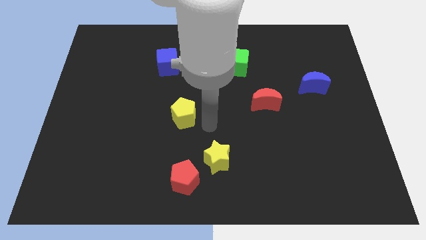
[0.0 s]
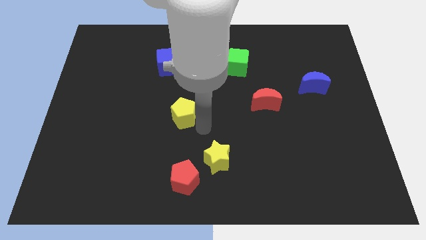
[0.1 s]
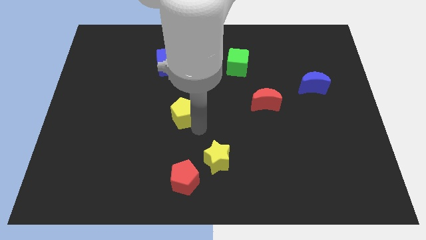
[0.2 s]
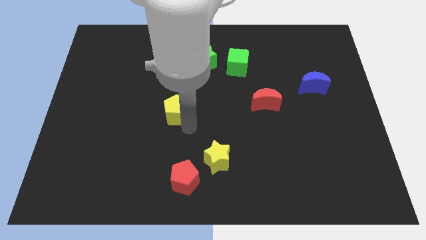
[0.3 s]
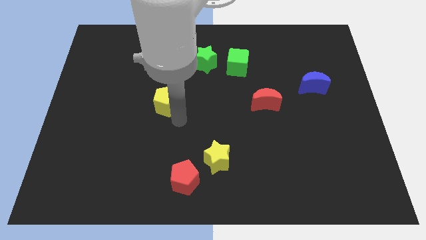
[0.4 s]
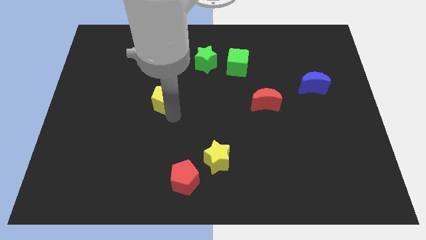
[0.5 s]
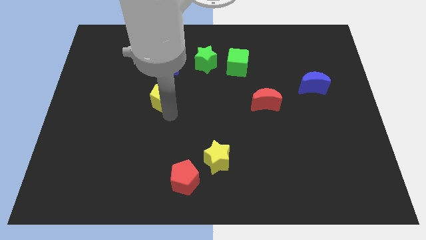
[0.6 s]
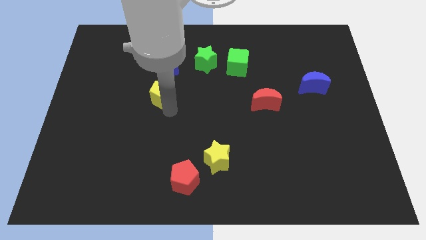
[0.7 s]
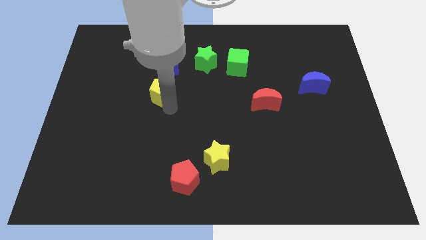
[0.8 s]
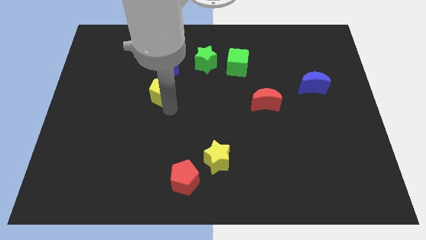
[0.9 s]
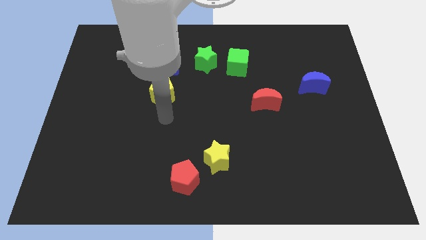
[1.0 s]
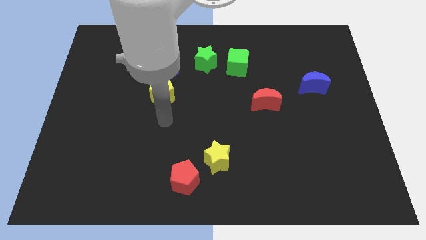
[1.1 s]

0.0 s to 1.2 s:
push yellow pentagon towards blue cube

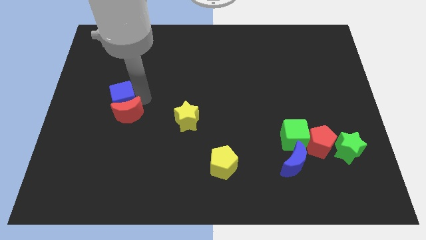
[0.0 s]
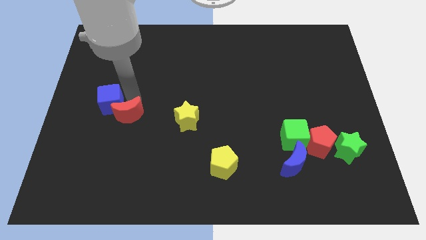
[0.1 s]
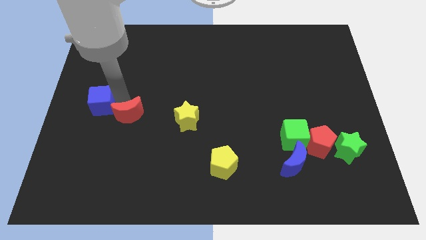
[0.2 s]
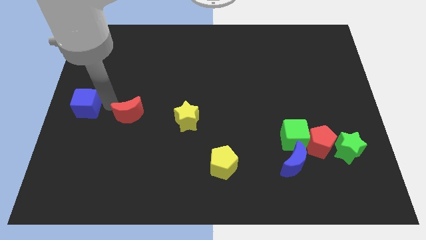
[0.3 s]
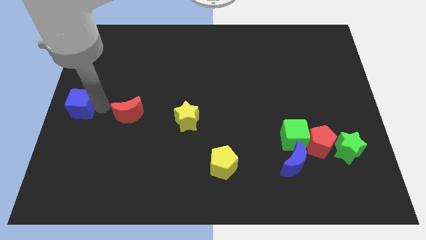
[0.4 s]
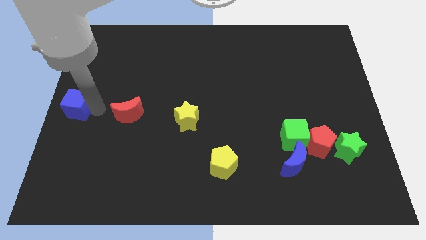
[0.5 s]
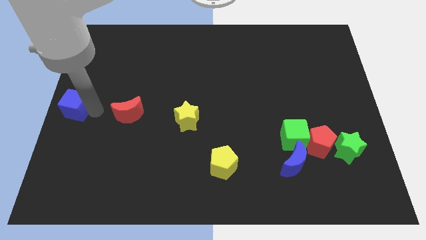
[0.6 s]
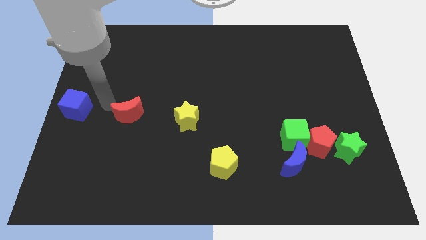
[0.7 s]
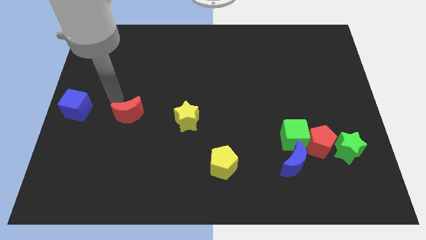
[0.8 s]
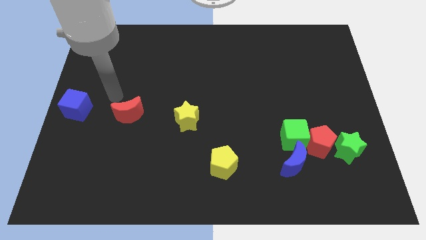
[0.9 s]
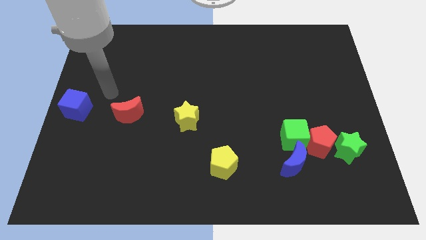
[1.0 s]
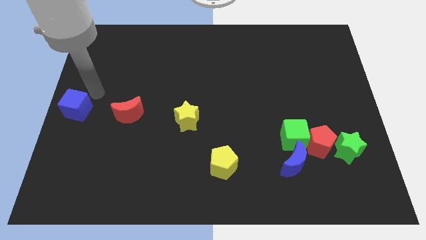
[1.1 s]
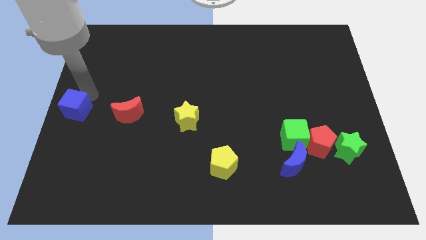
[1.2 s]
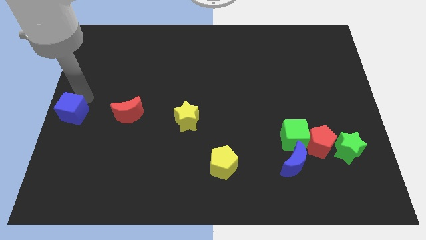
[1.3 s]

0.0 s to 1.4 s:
separate the blue cube from the red crescent

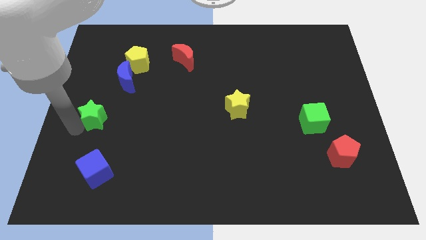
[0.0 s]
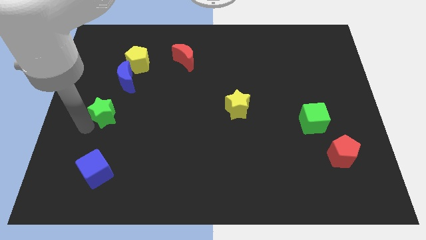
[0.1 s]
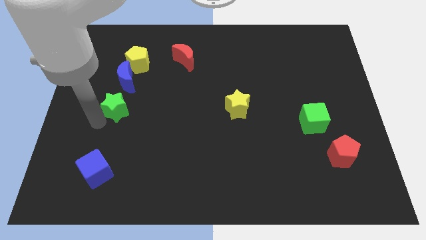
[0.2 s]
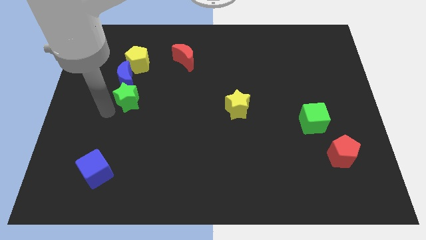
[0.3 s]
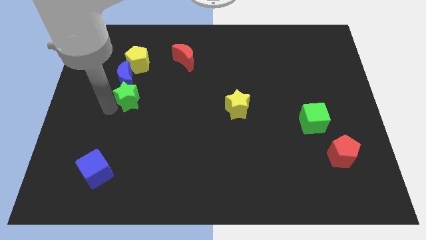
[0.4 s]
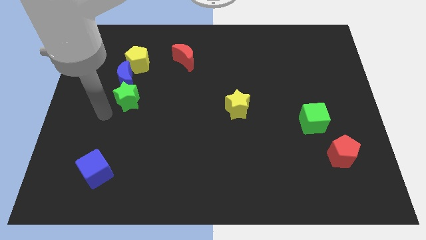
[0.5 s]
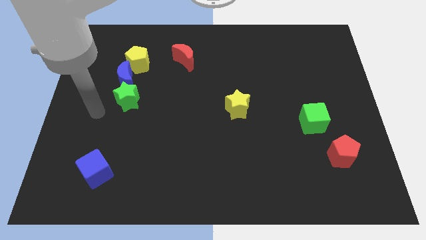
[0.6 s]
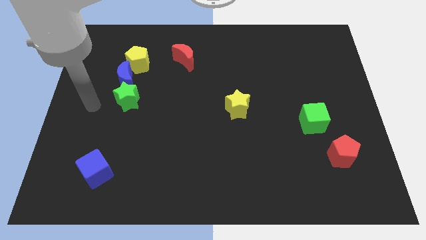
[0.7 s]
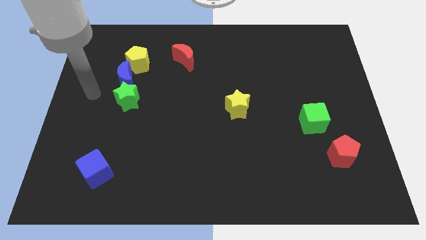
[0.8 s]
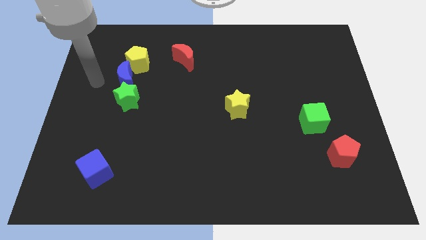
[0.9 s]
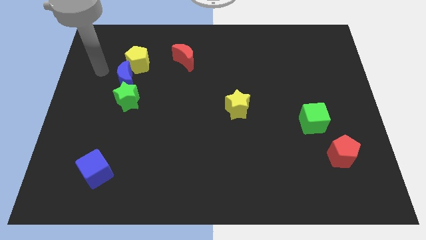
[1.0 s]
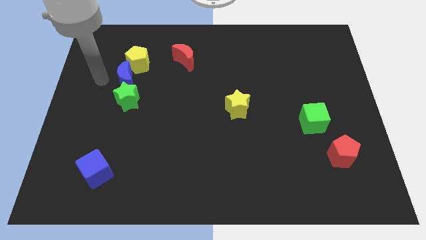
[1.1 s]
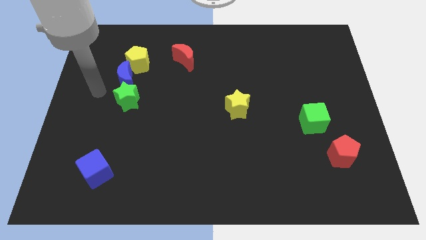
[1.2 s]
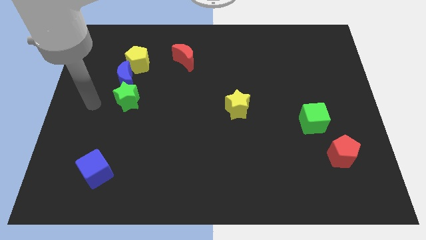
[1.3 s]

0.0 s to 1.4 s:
push the green star below the blue crescent

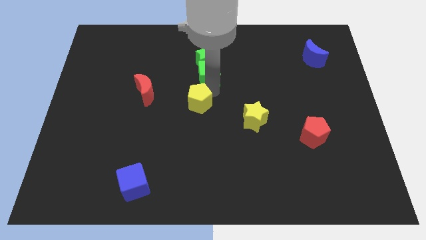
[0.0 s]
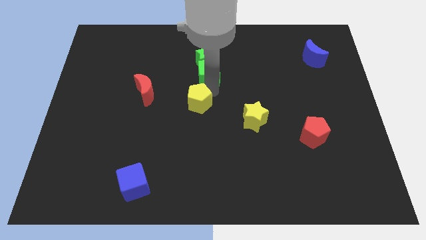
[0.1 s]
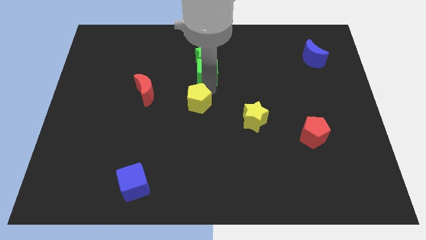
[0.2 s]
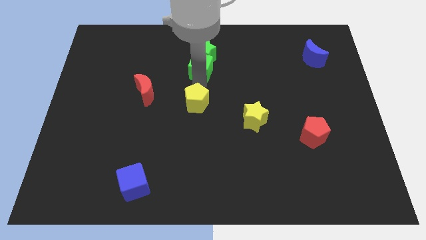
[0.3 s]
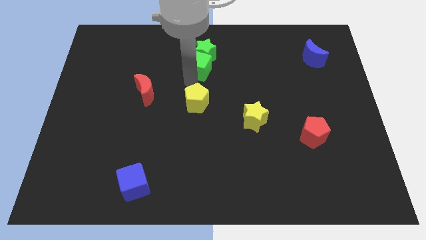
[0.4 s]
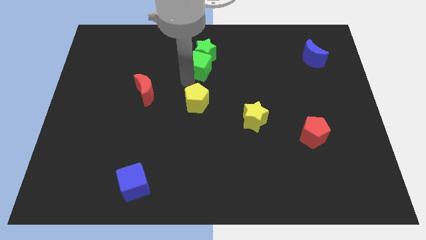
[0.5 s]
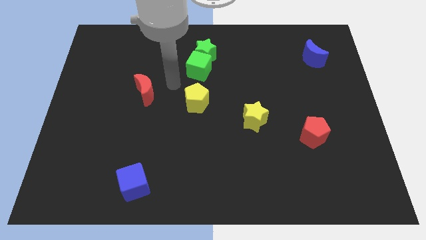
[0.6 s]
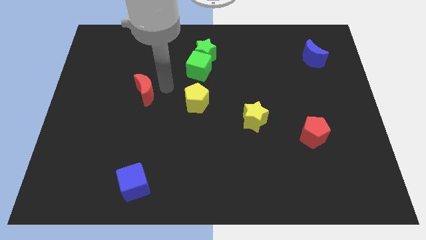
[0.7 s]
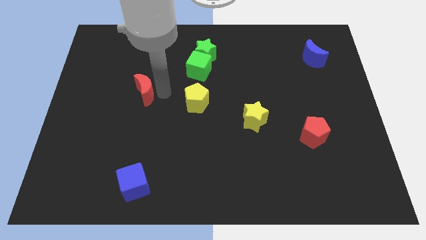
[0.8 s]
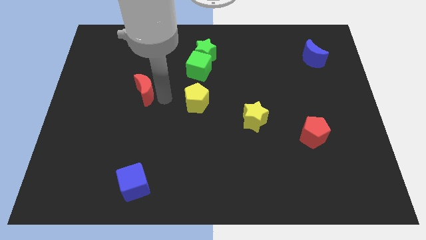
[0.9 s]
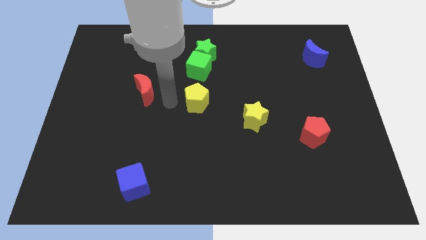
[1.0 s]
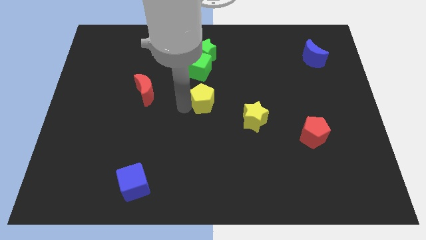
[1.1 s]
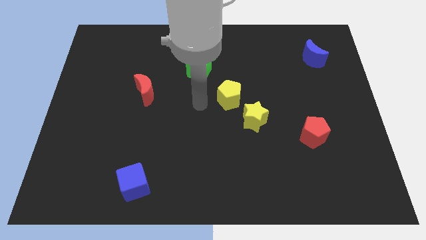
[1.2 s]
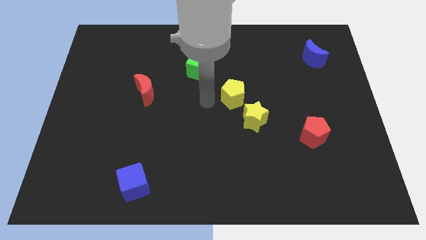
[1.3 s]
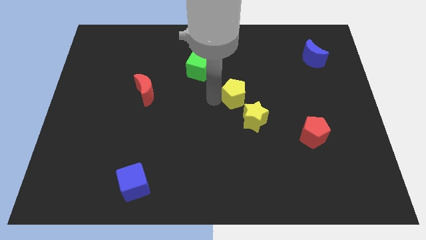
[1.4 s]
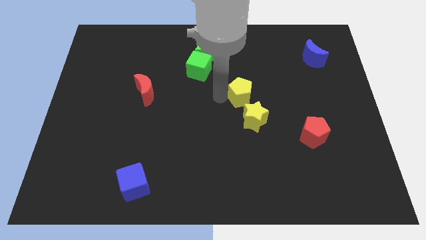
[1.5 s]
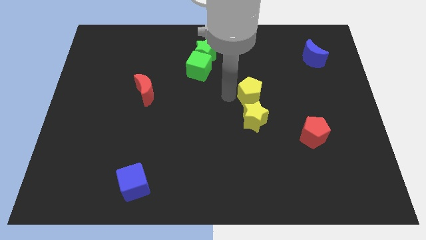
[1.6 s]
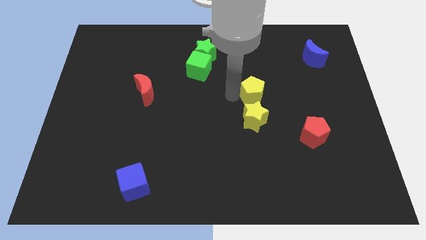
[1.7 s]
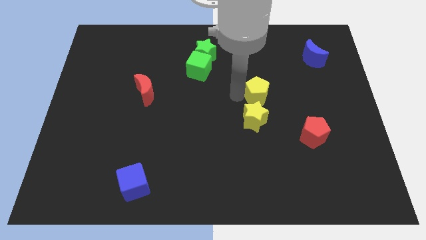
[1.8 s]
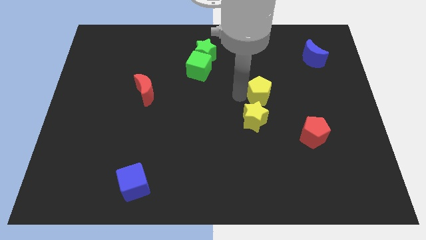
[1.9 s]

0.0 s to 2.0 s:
move the yellow pentagon above the yellow star

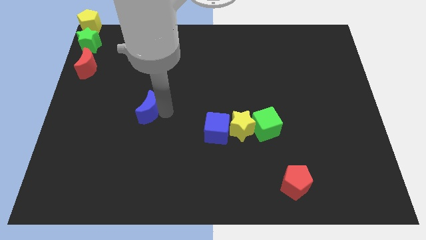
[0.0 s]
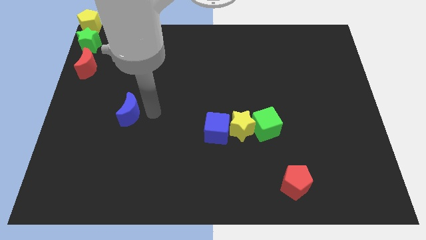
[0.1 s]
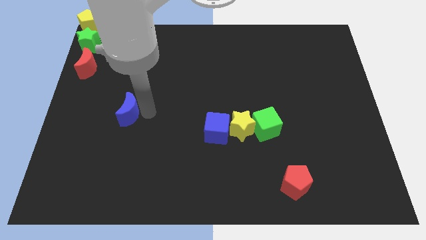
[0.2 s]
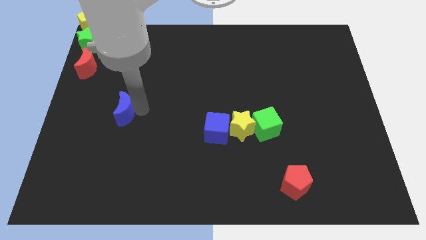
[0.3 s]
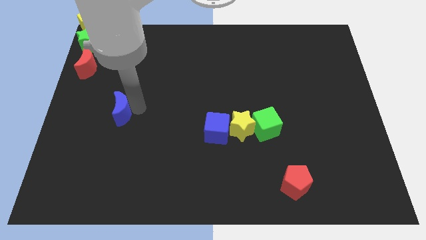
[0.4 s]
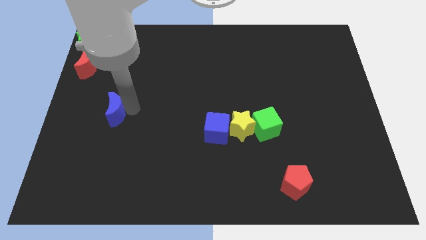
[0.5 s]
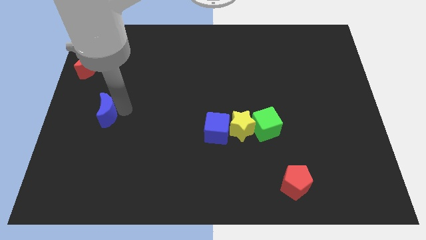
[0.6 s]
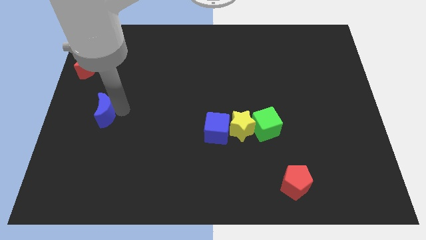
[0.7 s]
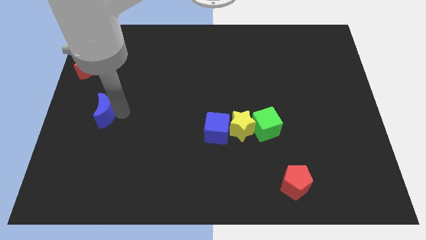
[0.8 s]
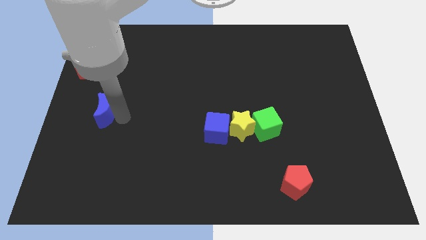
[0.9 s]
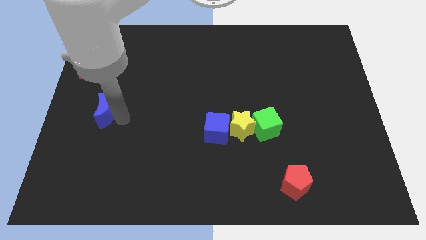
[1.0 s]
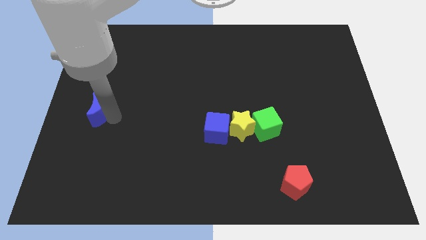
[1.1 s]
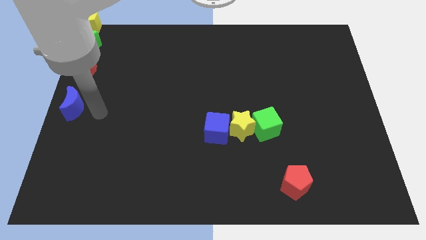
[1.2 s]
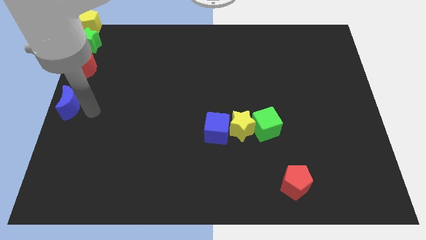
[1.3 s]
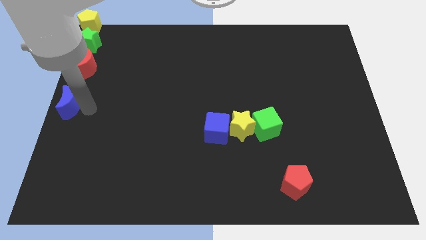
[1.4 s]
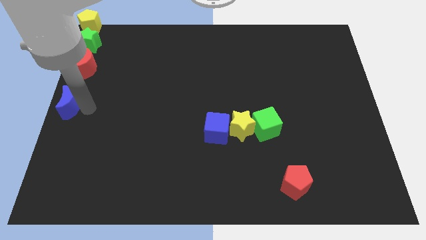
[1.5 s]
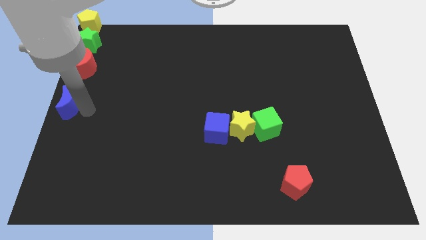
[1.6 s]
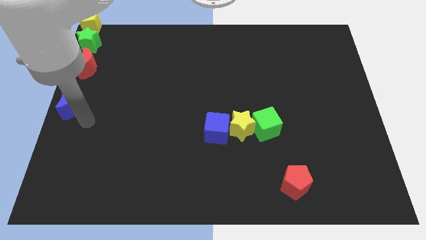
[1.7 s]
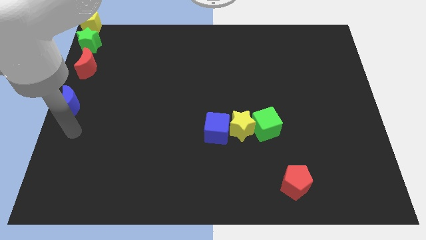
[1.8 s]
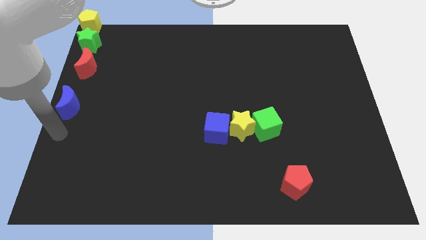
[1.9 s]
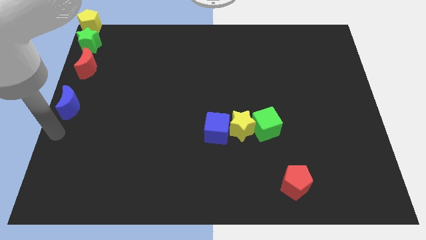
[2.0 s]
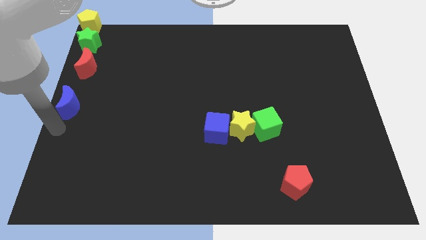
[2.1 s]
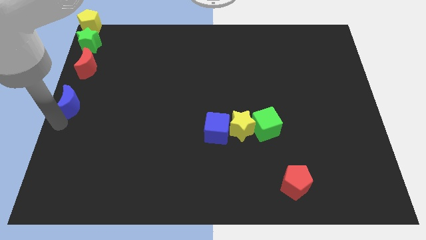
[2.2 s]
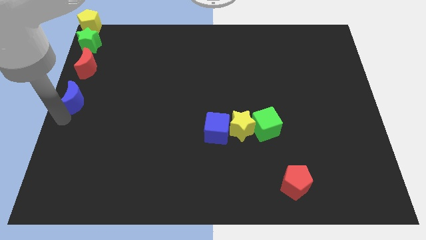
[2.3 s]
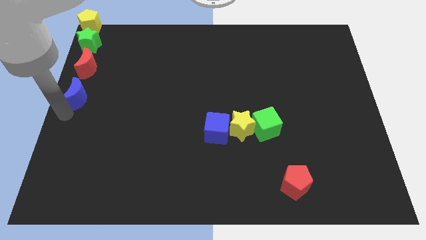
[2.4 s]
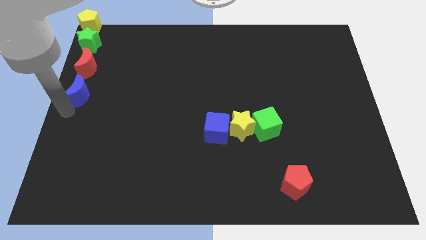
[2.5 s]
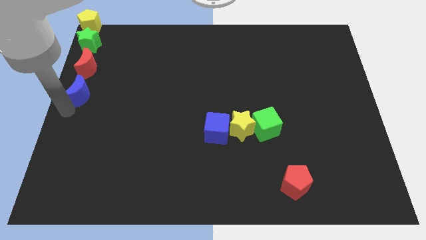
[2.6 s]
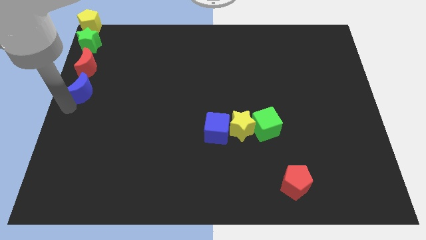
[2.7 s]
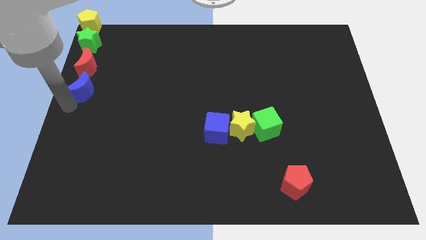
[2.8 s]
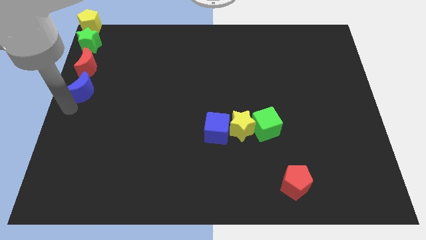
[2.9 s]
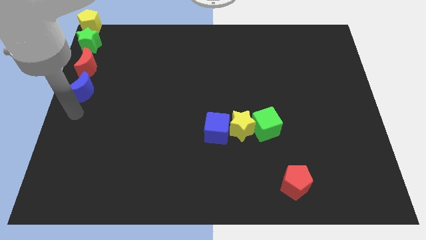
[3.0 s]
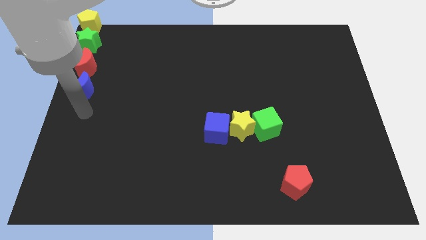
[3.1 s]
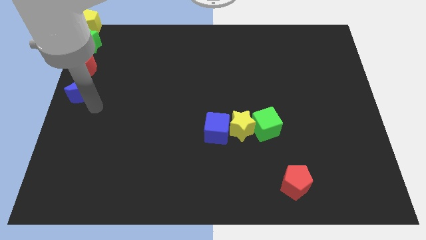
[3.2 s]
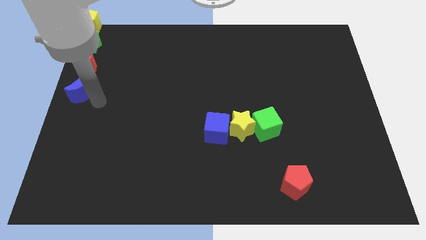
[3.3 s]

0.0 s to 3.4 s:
move the blue crescent at the bottom of the red crescent
